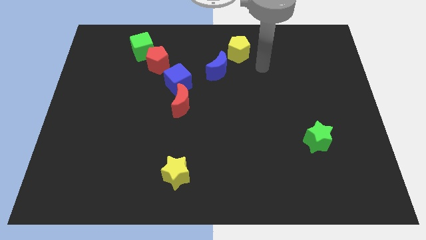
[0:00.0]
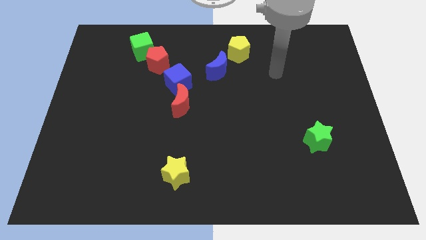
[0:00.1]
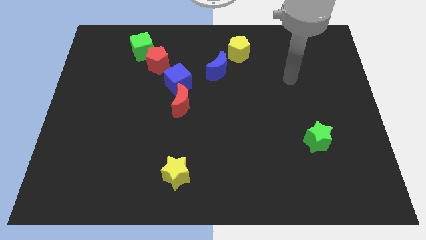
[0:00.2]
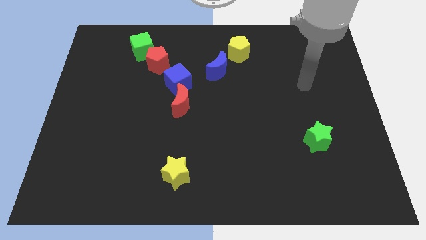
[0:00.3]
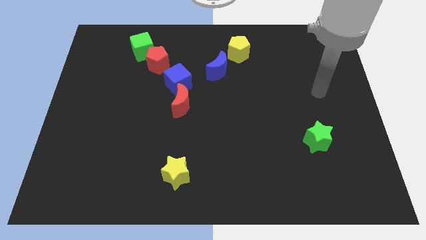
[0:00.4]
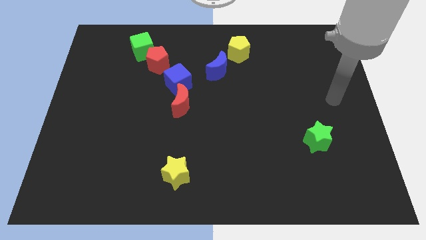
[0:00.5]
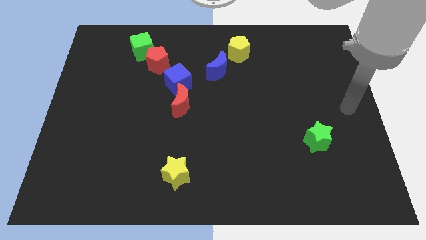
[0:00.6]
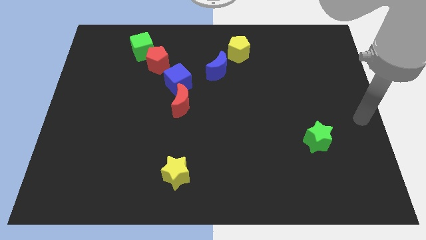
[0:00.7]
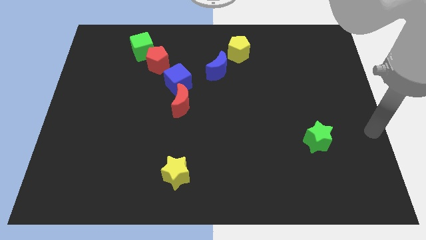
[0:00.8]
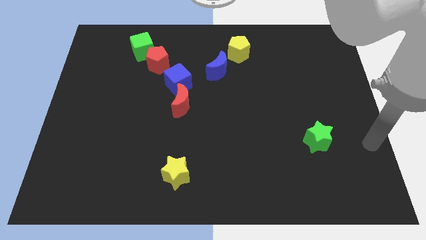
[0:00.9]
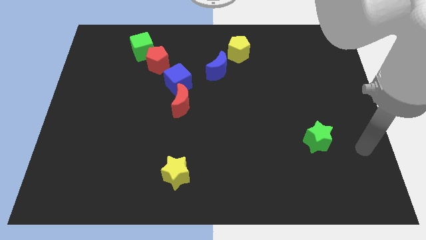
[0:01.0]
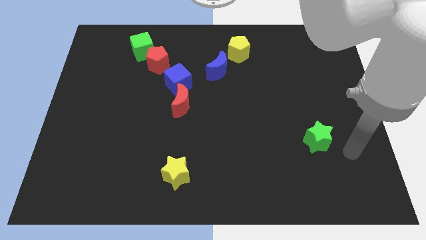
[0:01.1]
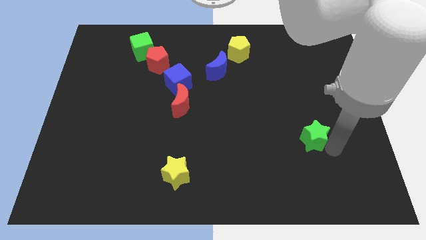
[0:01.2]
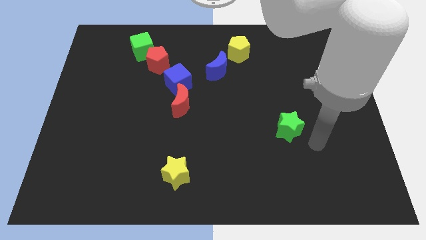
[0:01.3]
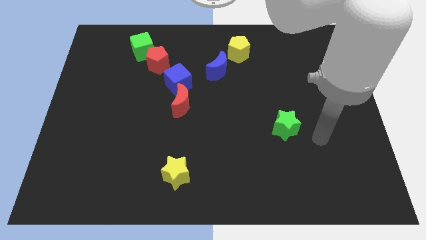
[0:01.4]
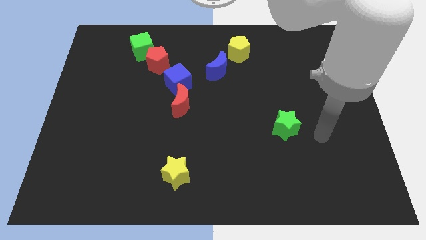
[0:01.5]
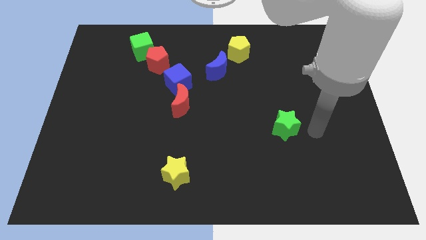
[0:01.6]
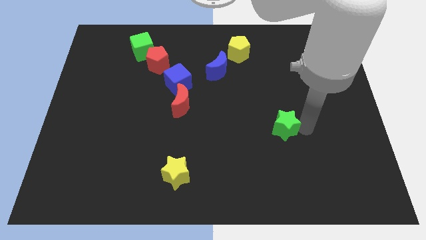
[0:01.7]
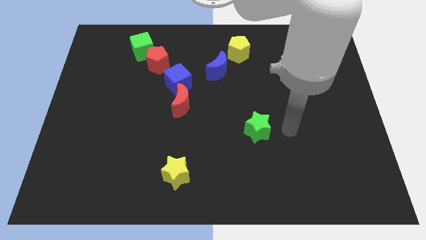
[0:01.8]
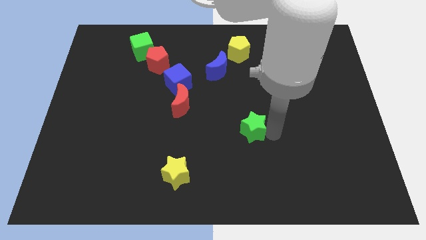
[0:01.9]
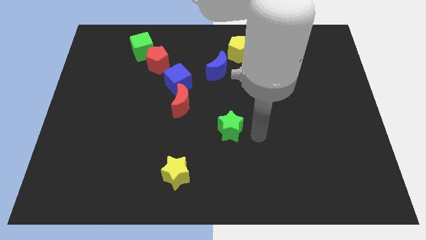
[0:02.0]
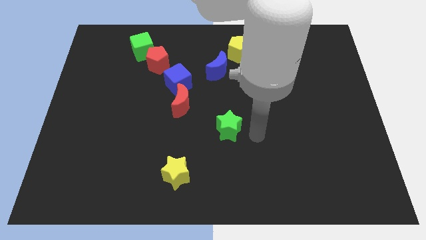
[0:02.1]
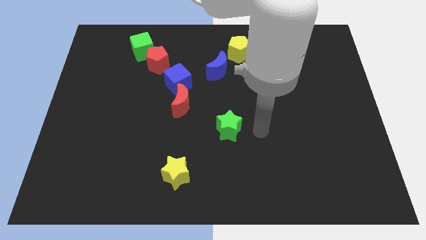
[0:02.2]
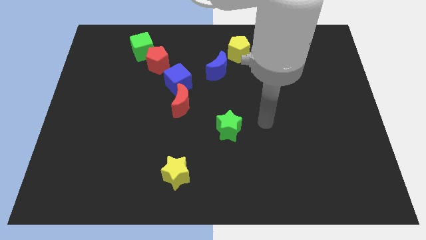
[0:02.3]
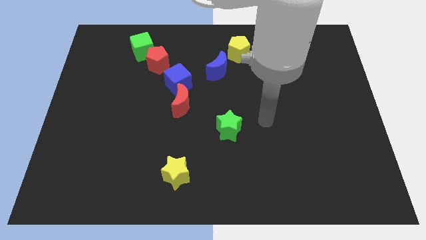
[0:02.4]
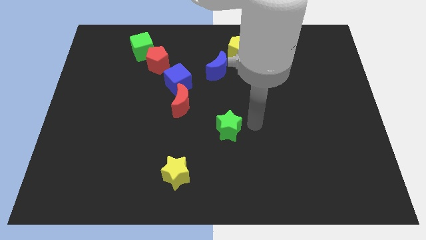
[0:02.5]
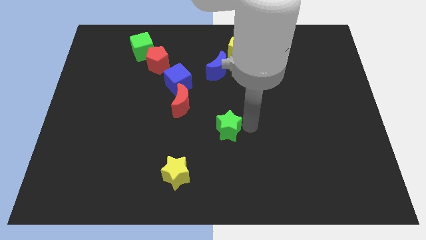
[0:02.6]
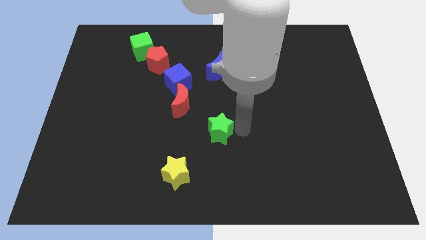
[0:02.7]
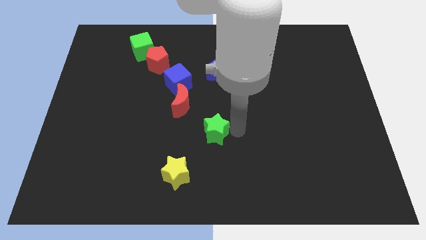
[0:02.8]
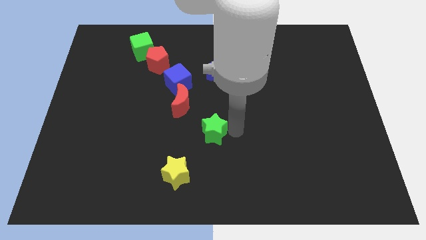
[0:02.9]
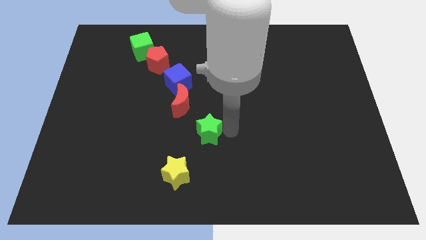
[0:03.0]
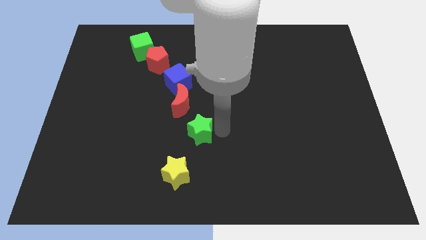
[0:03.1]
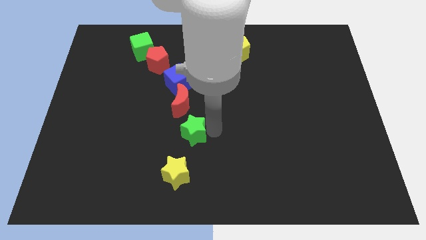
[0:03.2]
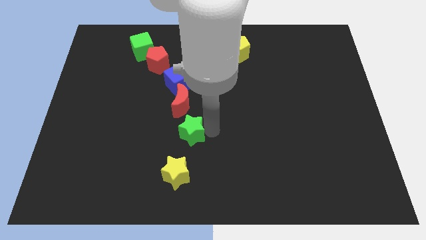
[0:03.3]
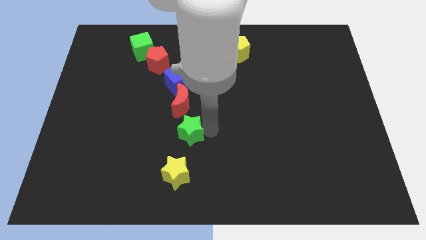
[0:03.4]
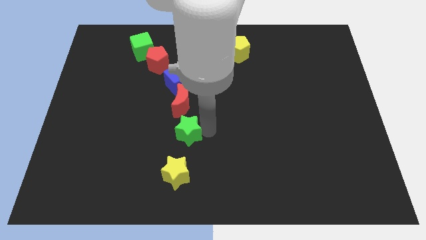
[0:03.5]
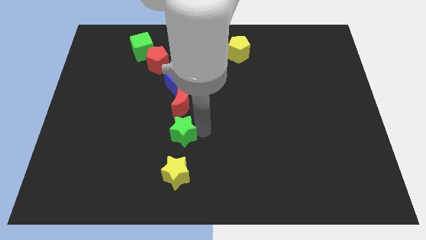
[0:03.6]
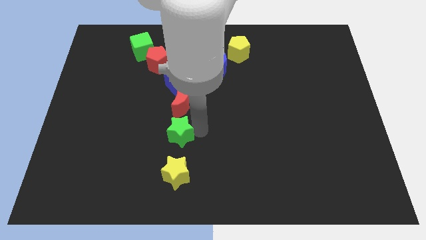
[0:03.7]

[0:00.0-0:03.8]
place the green star to the bottom of the red moon

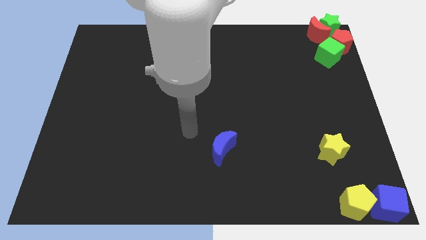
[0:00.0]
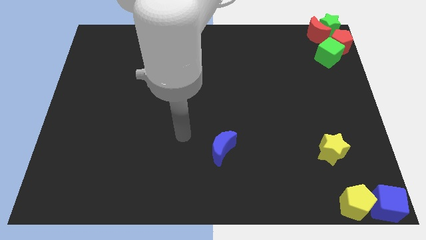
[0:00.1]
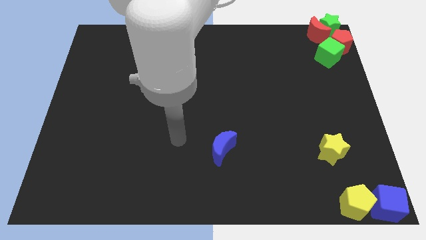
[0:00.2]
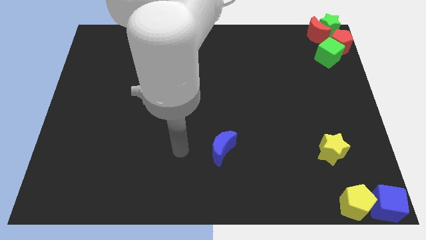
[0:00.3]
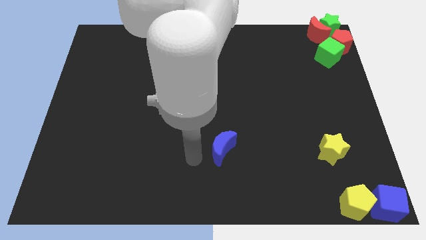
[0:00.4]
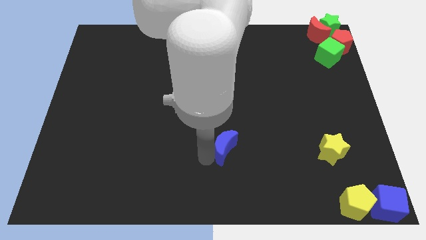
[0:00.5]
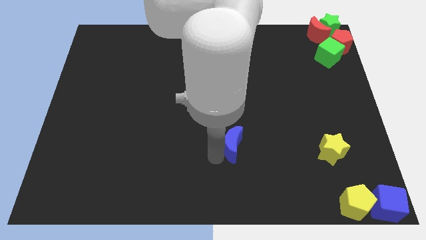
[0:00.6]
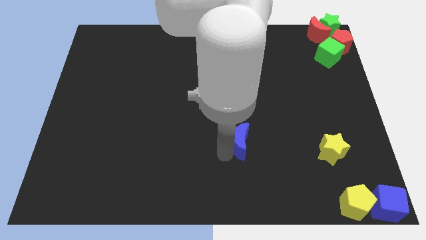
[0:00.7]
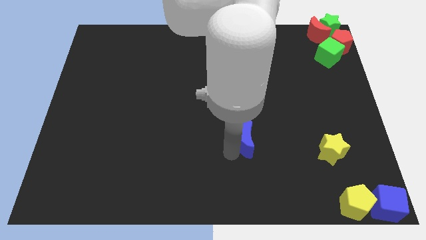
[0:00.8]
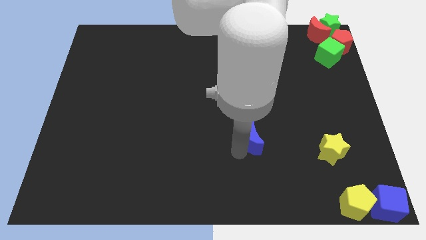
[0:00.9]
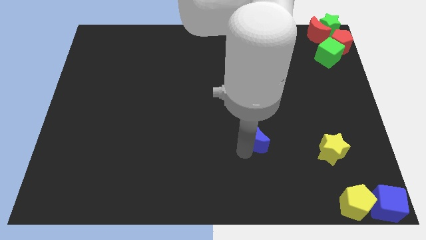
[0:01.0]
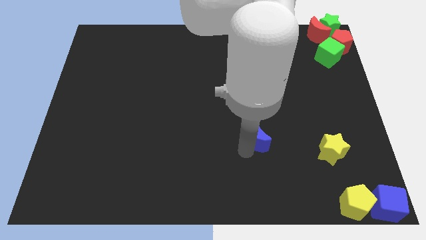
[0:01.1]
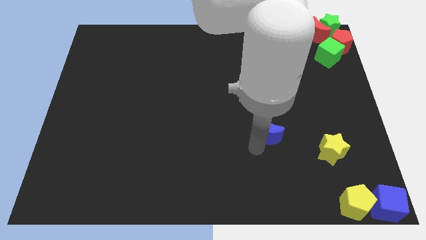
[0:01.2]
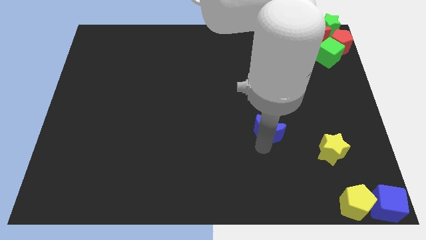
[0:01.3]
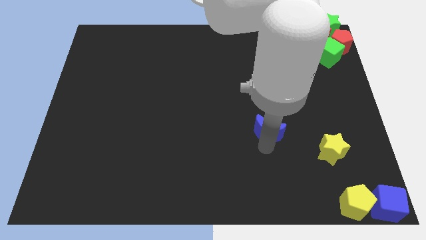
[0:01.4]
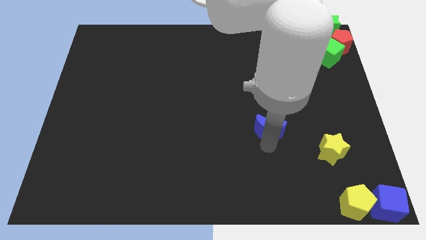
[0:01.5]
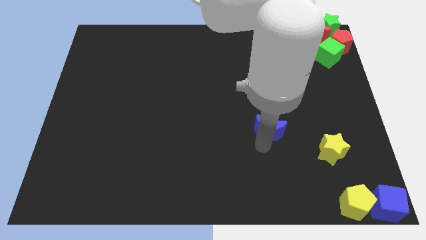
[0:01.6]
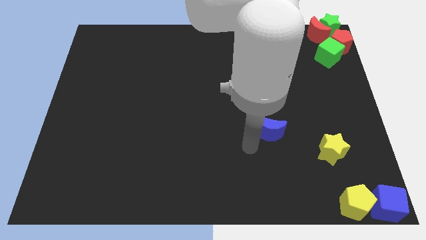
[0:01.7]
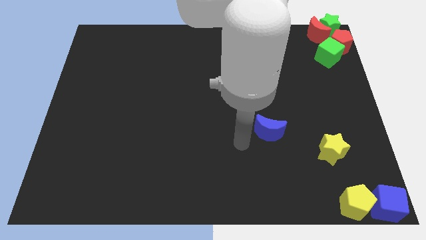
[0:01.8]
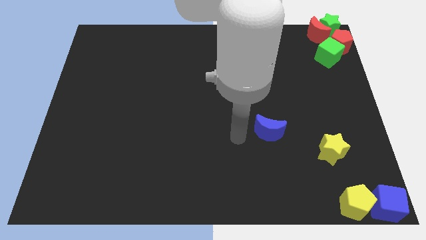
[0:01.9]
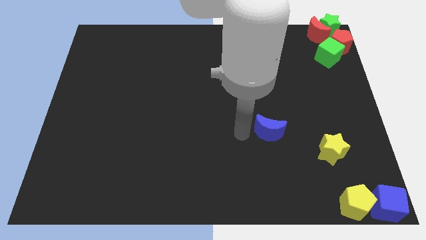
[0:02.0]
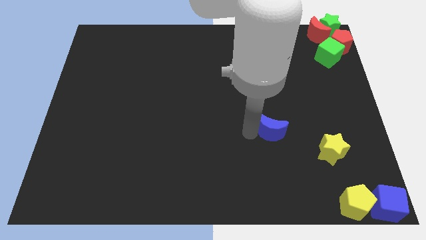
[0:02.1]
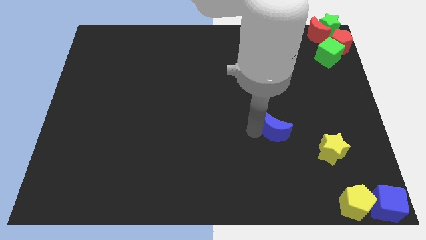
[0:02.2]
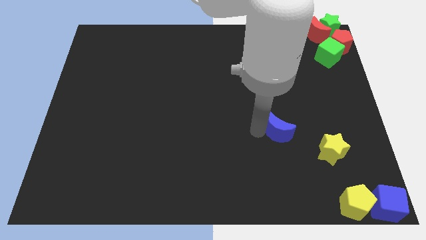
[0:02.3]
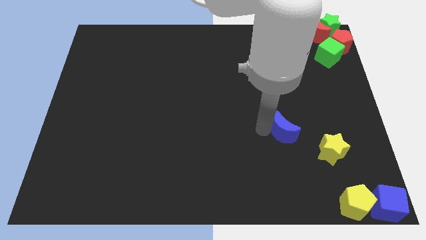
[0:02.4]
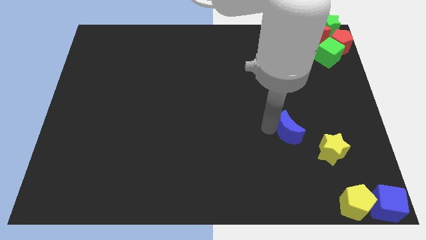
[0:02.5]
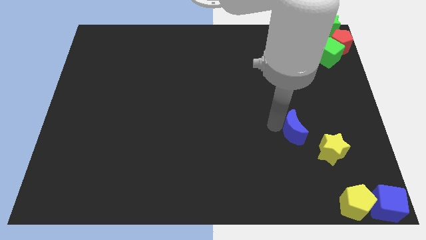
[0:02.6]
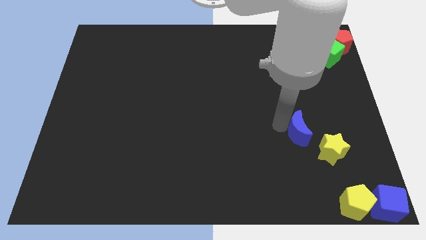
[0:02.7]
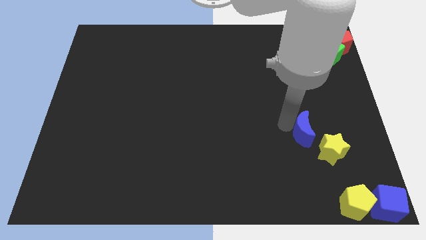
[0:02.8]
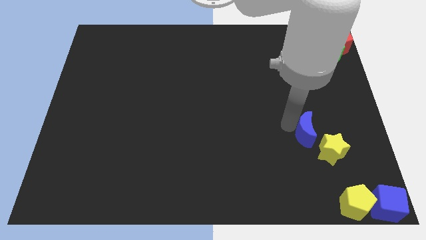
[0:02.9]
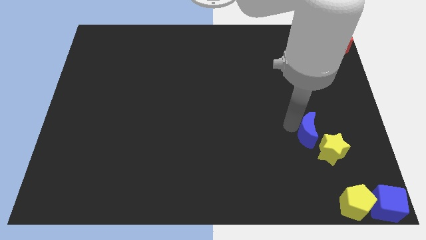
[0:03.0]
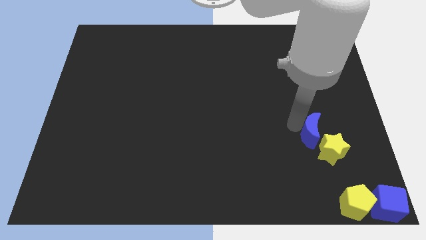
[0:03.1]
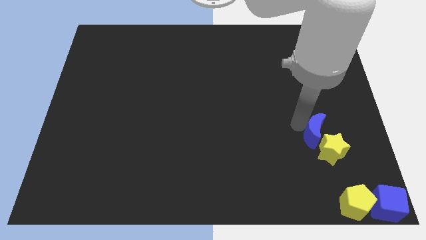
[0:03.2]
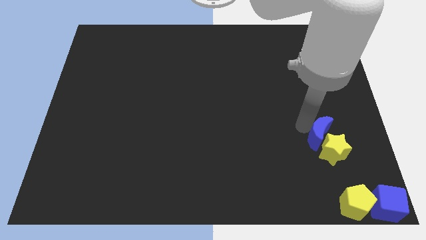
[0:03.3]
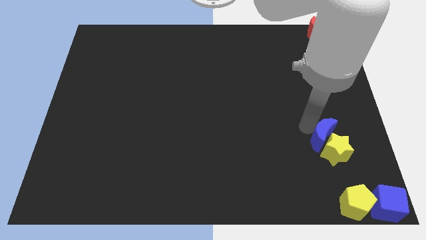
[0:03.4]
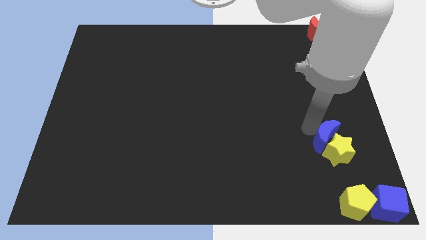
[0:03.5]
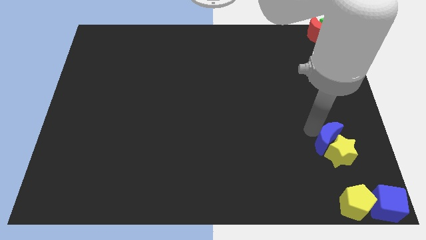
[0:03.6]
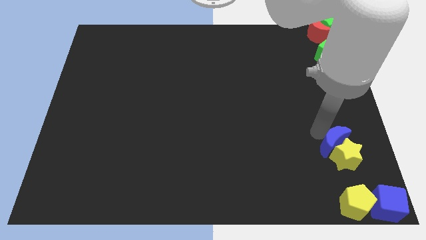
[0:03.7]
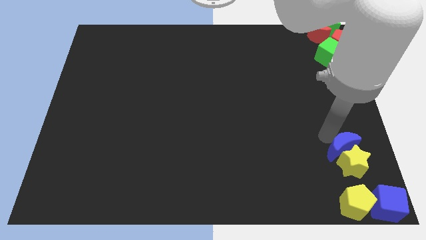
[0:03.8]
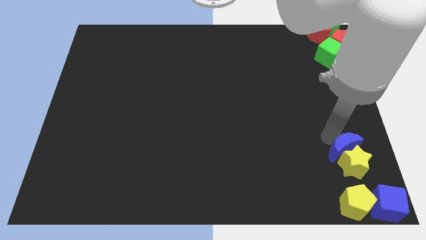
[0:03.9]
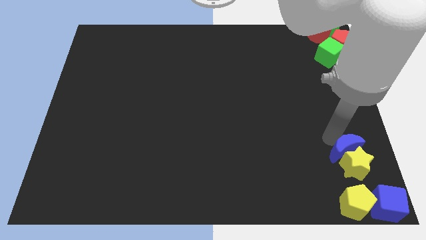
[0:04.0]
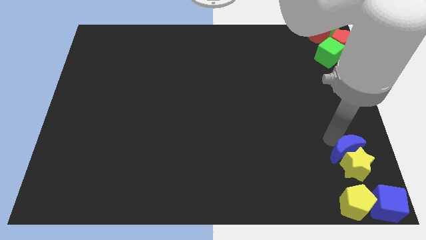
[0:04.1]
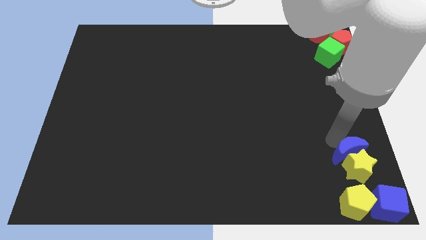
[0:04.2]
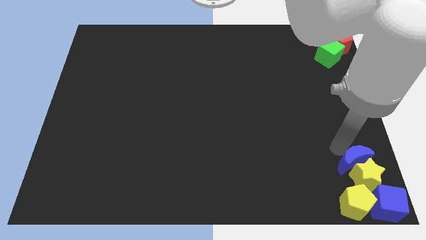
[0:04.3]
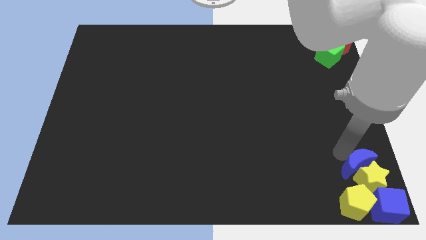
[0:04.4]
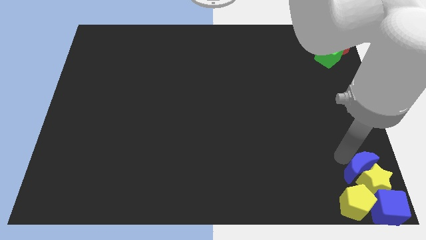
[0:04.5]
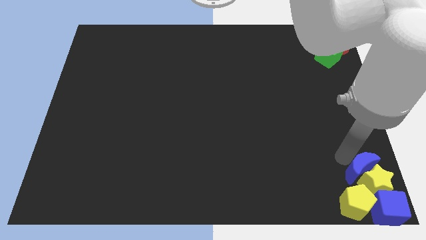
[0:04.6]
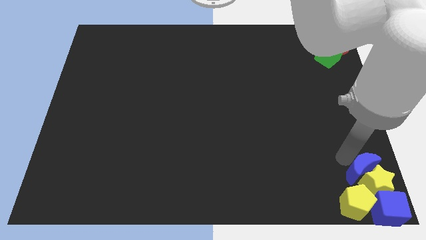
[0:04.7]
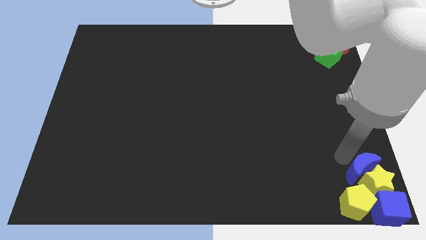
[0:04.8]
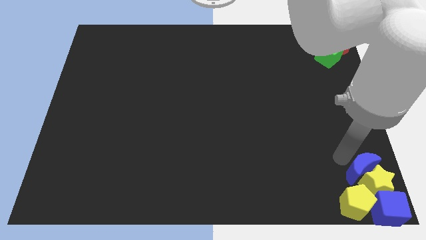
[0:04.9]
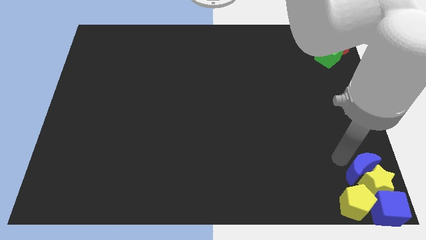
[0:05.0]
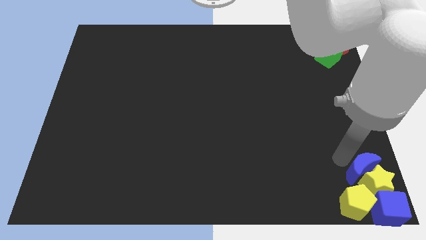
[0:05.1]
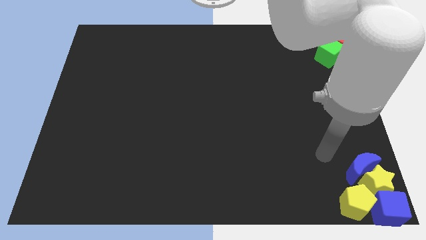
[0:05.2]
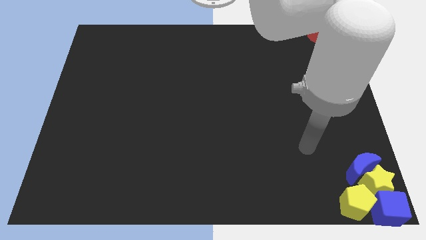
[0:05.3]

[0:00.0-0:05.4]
place the yellow star and blue moon at the top of blue cube
